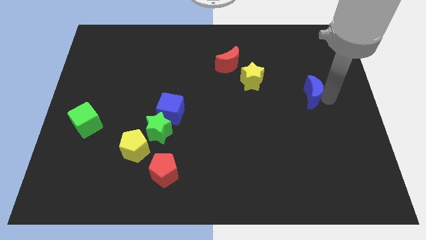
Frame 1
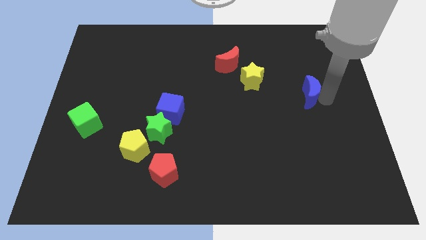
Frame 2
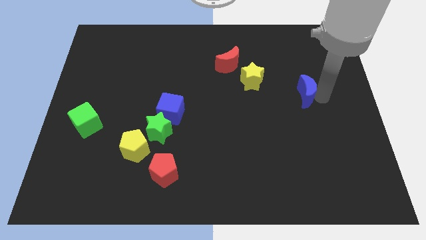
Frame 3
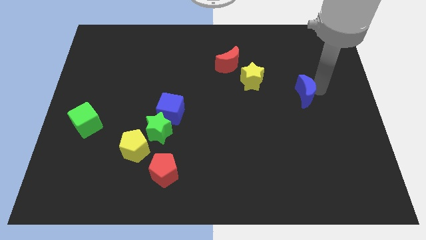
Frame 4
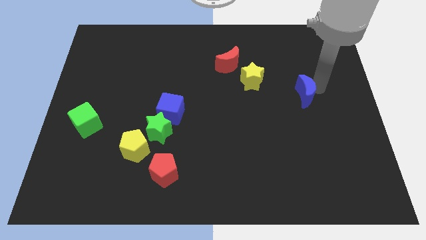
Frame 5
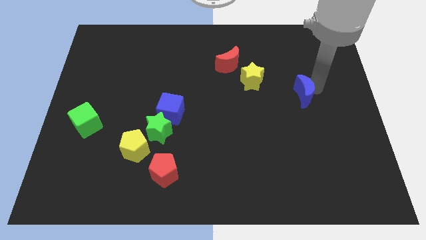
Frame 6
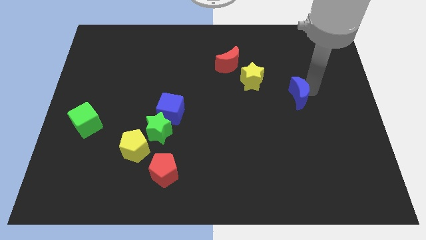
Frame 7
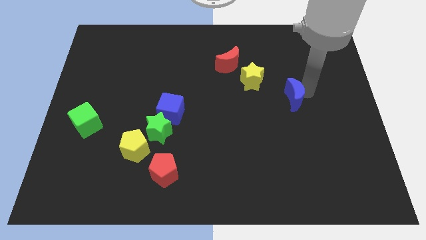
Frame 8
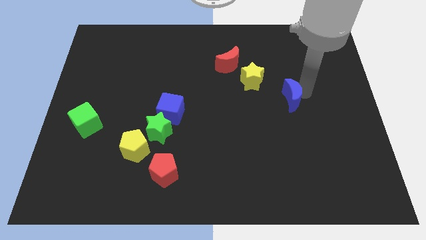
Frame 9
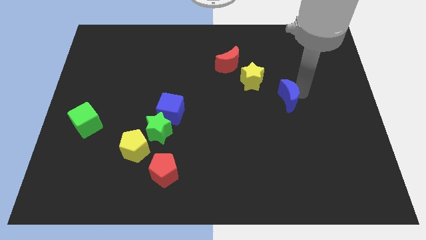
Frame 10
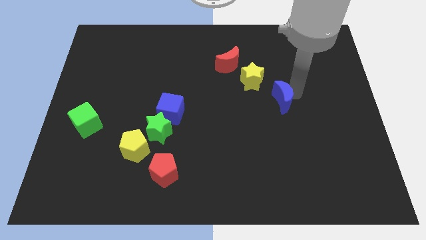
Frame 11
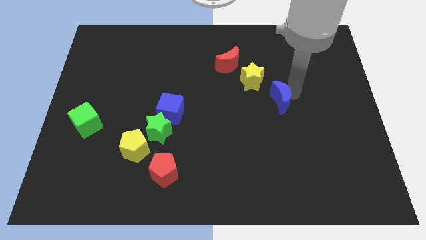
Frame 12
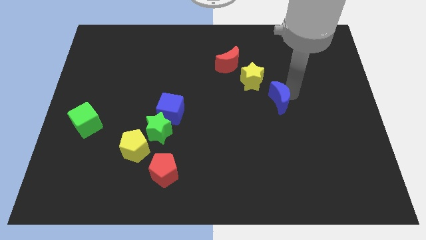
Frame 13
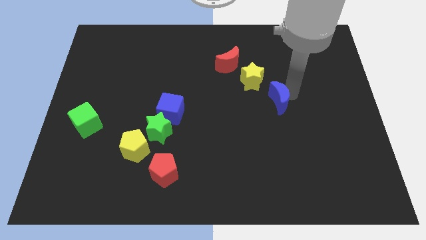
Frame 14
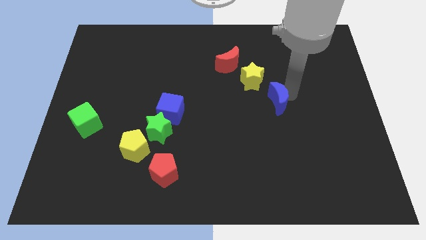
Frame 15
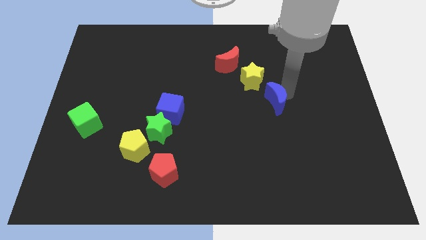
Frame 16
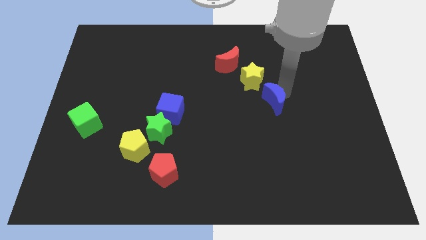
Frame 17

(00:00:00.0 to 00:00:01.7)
place the blue crescent close to yellow star

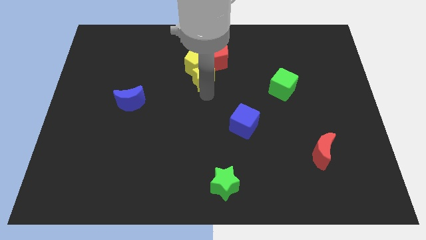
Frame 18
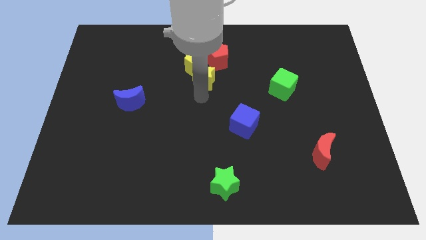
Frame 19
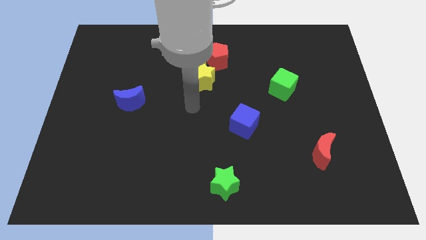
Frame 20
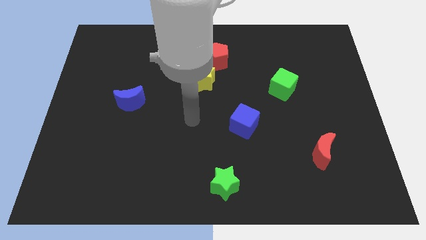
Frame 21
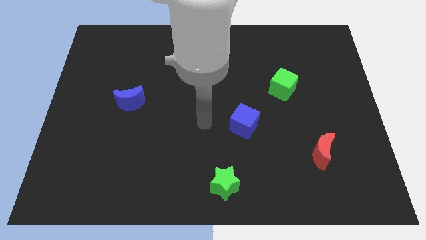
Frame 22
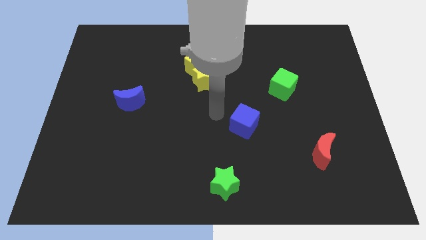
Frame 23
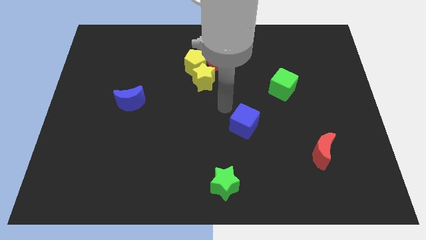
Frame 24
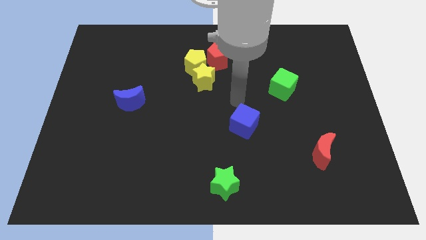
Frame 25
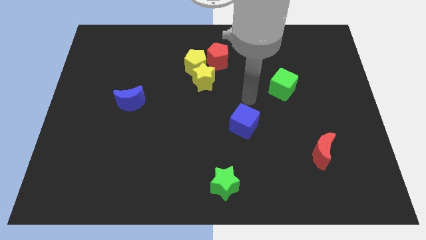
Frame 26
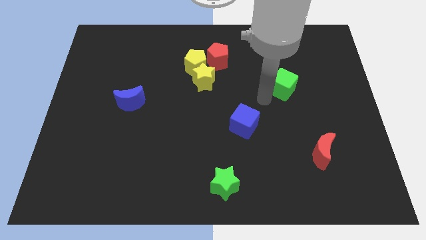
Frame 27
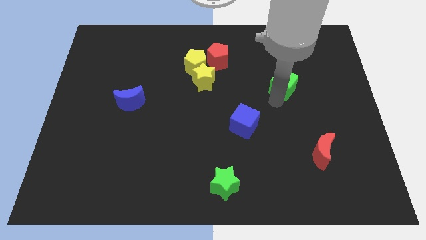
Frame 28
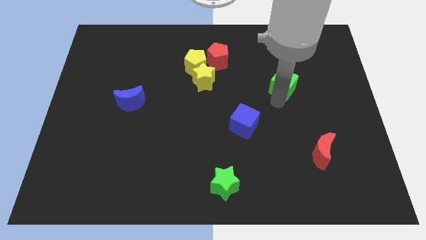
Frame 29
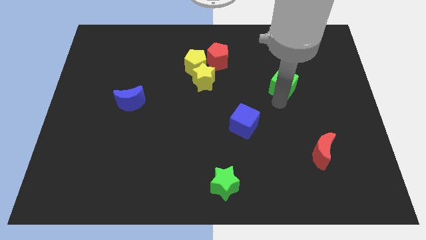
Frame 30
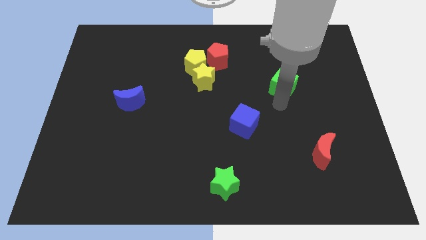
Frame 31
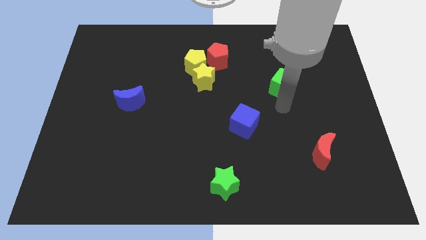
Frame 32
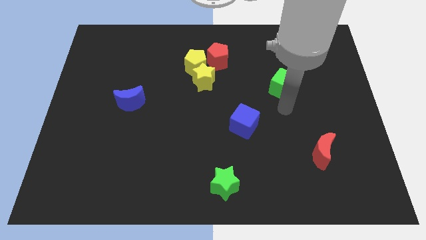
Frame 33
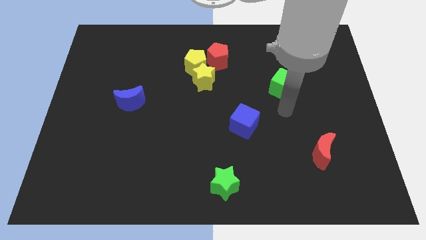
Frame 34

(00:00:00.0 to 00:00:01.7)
point your arm at the bottom of the green cube

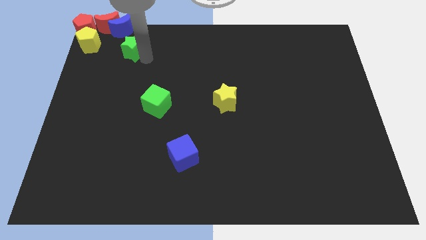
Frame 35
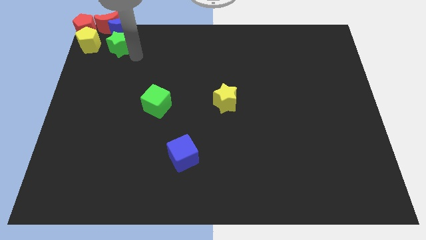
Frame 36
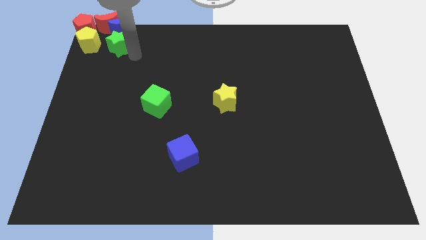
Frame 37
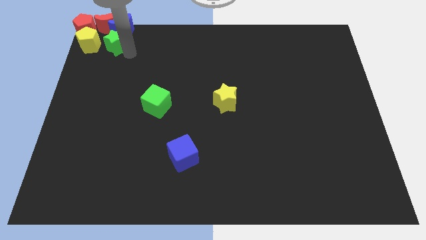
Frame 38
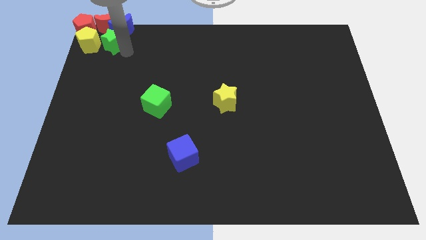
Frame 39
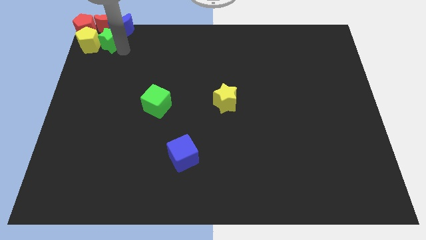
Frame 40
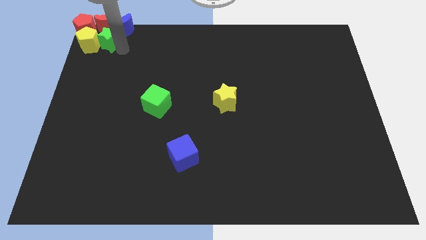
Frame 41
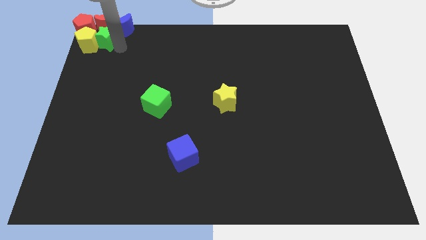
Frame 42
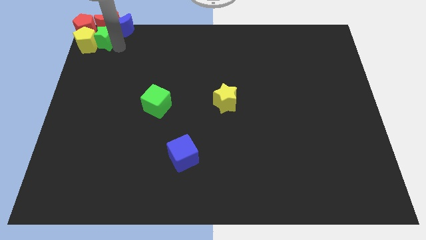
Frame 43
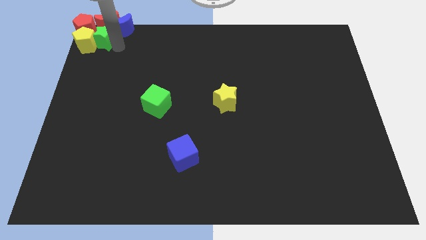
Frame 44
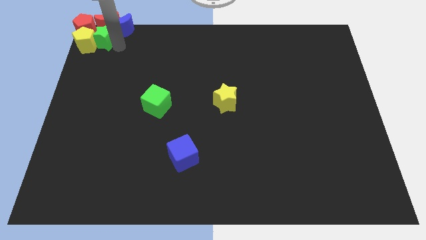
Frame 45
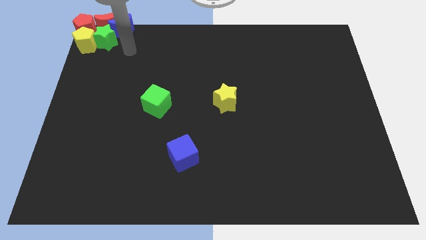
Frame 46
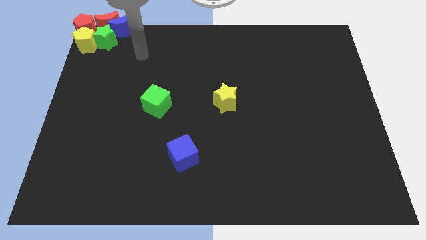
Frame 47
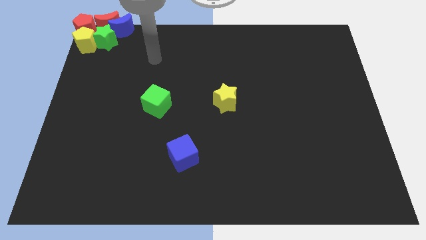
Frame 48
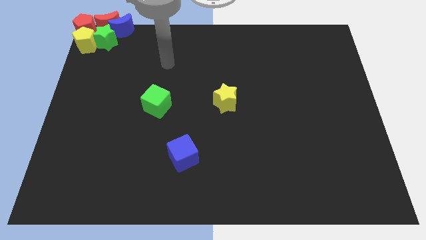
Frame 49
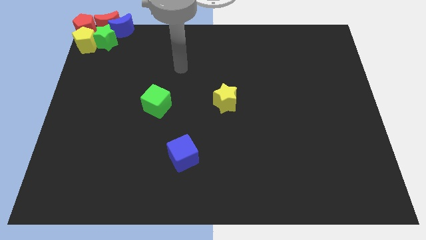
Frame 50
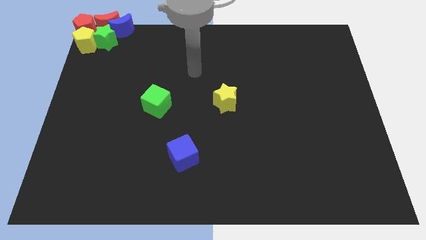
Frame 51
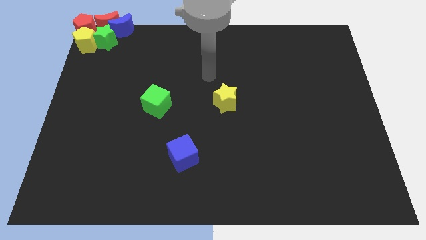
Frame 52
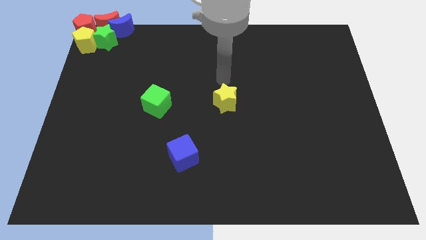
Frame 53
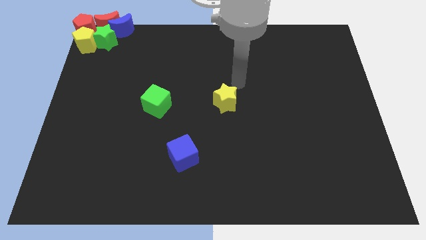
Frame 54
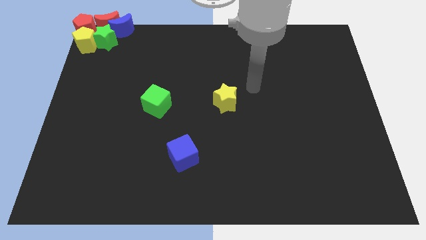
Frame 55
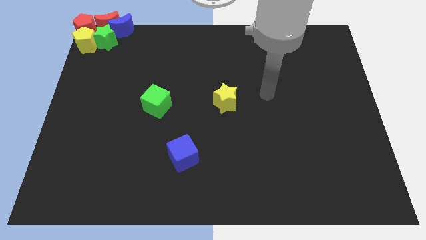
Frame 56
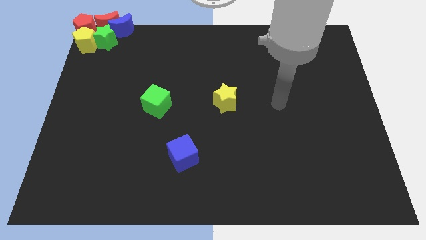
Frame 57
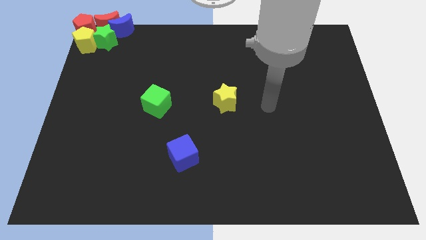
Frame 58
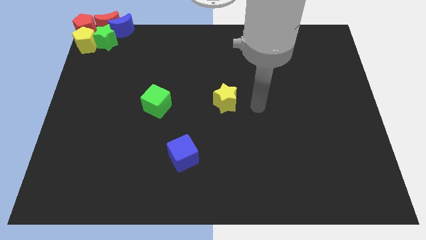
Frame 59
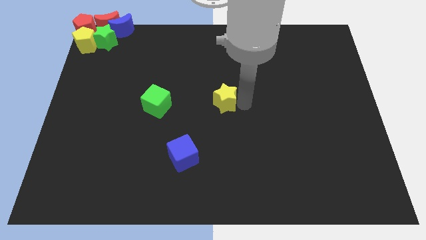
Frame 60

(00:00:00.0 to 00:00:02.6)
push the green star into the group of blocks

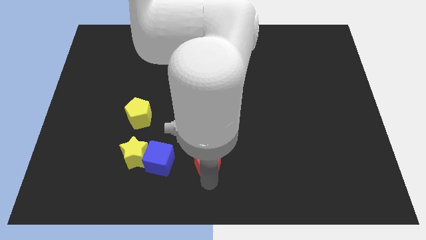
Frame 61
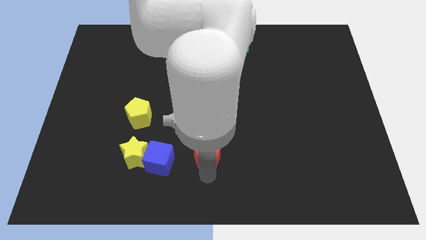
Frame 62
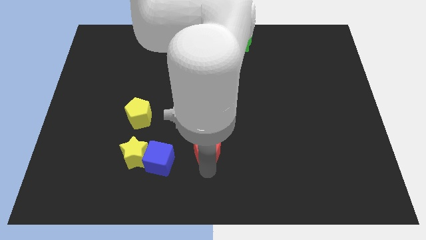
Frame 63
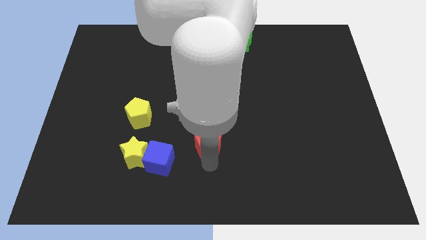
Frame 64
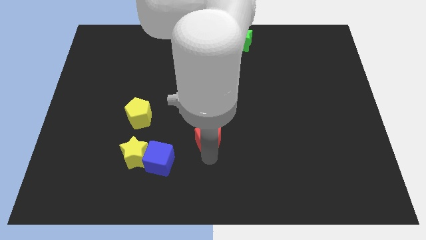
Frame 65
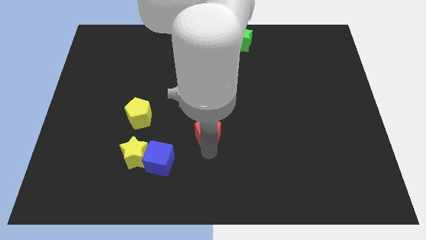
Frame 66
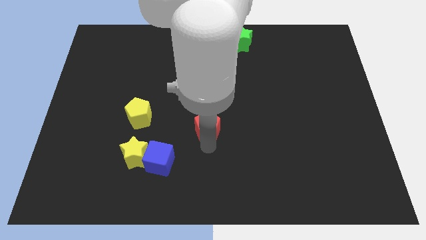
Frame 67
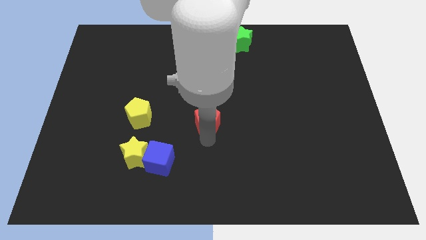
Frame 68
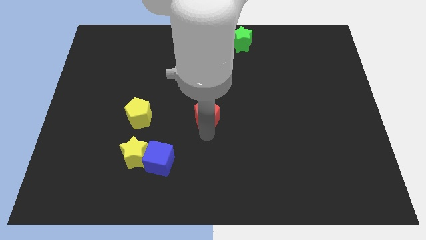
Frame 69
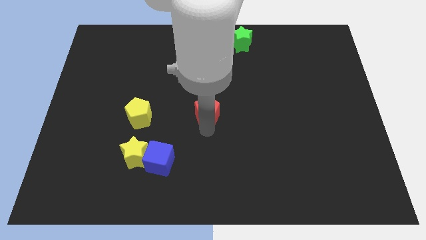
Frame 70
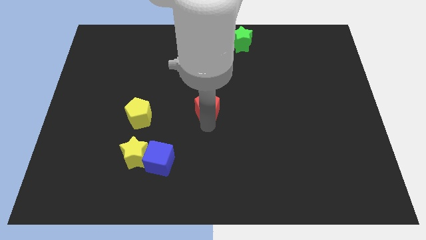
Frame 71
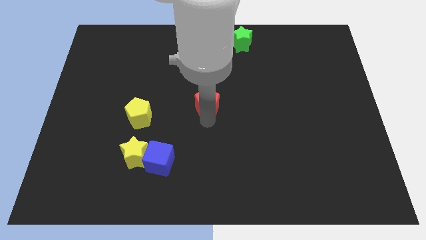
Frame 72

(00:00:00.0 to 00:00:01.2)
move the red pentagon to the center of the board

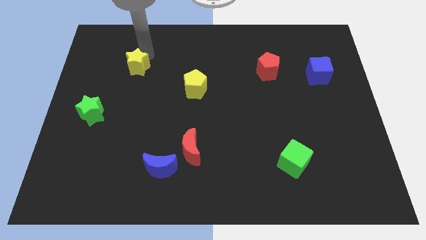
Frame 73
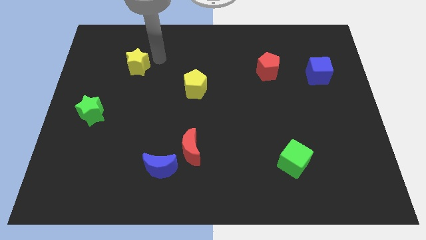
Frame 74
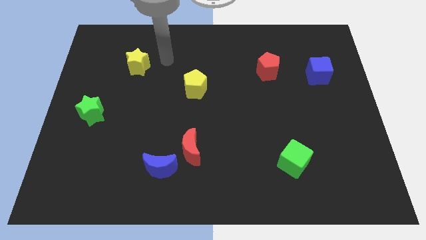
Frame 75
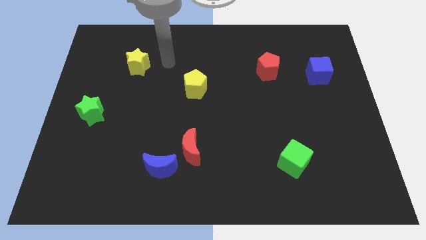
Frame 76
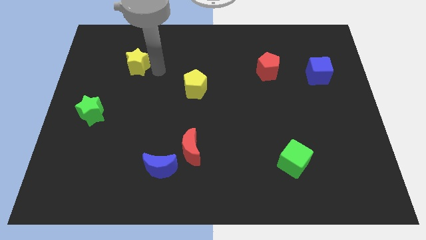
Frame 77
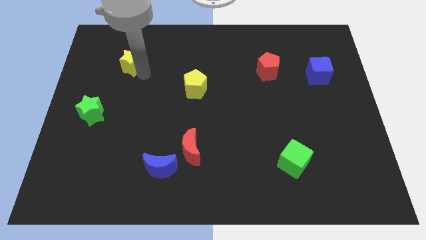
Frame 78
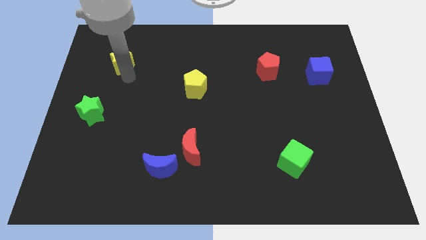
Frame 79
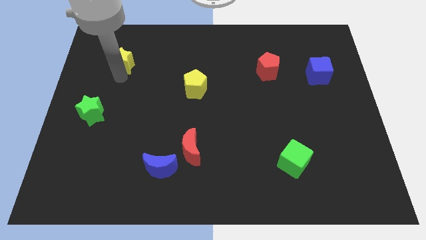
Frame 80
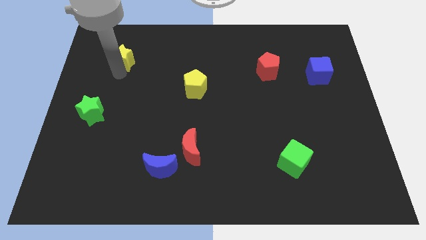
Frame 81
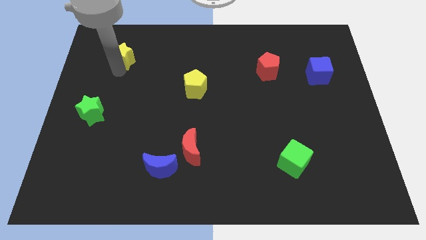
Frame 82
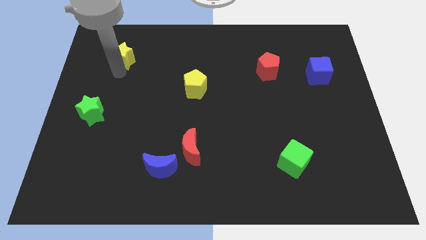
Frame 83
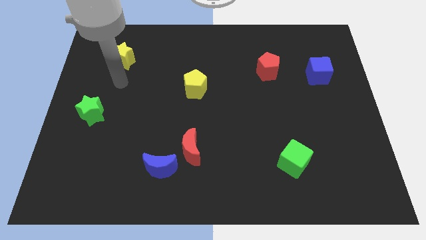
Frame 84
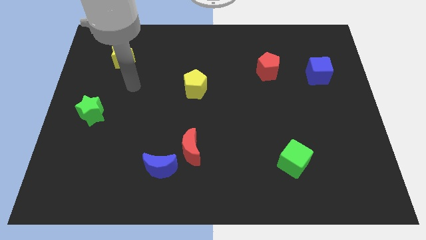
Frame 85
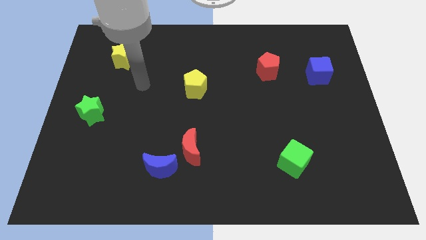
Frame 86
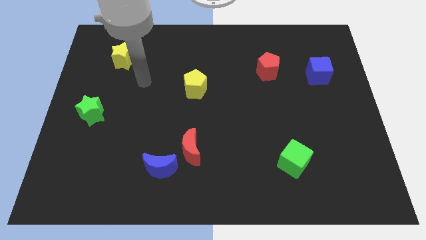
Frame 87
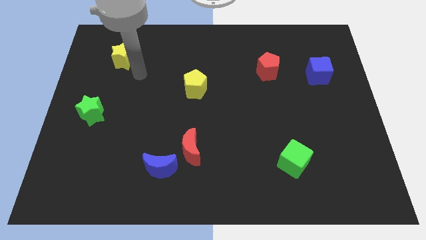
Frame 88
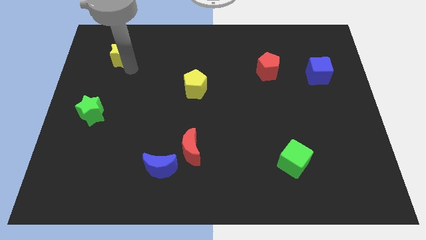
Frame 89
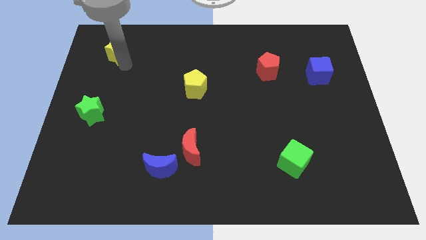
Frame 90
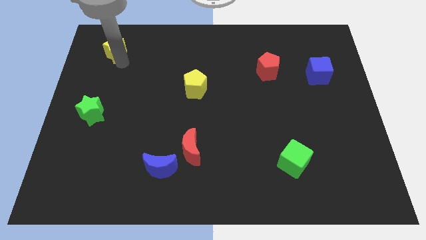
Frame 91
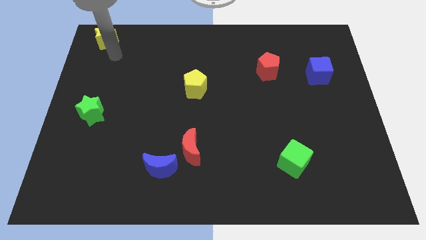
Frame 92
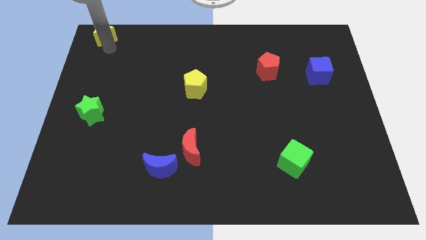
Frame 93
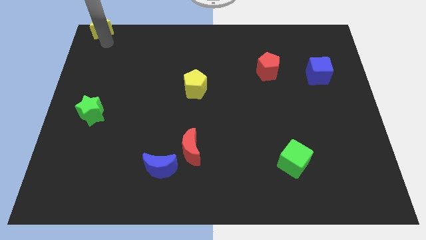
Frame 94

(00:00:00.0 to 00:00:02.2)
place yellow star to the top left corner of the board
